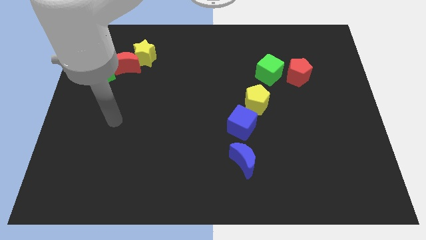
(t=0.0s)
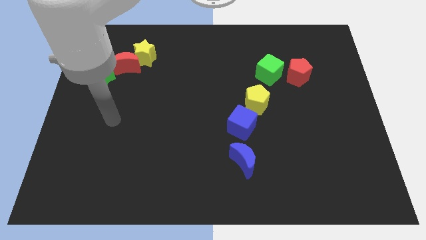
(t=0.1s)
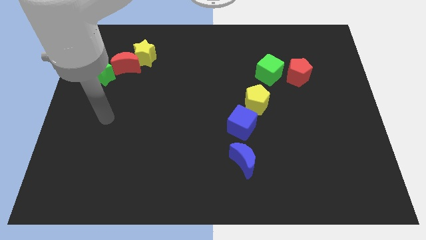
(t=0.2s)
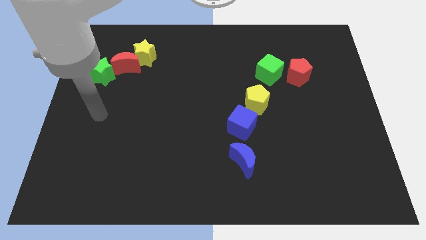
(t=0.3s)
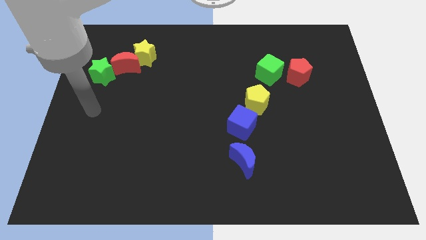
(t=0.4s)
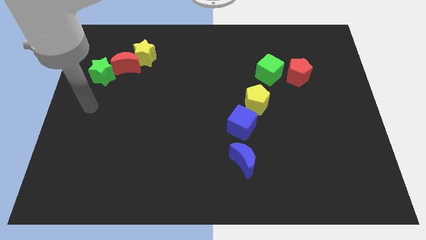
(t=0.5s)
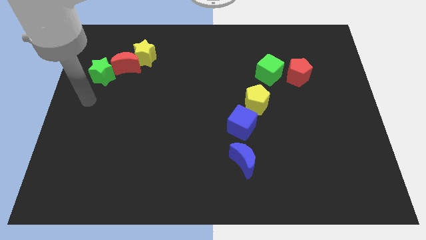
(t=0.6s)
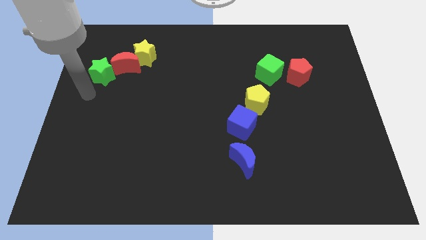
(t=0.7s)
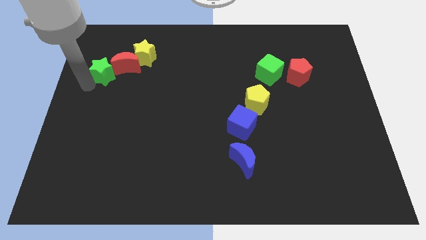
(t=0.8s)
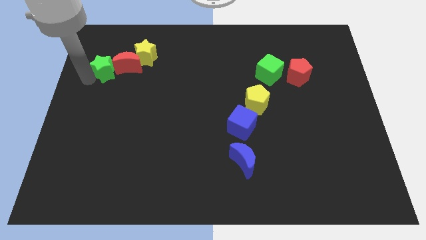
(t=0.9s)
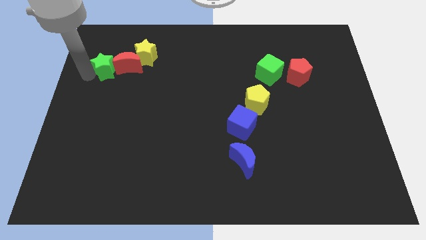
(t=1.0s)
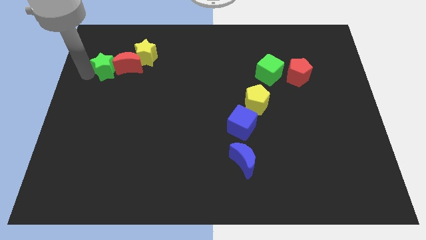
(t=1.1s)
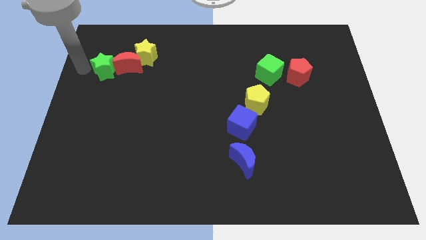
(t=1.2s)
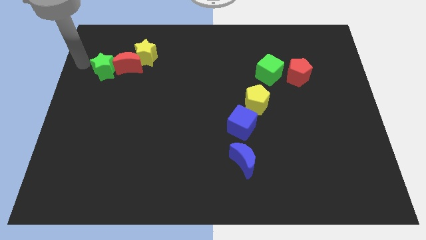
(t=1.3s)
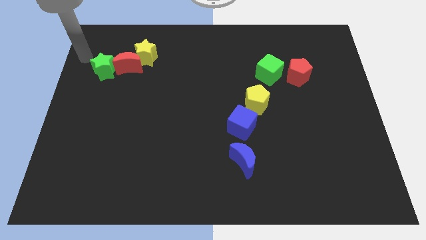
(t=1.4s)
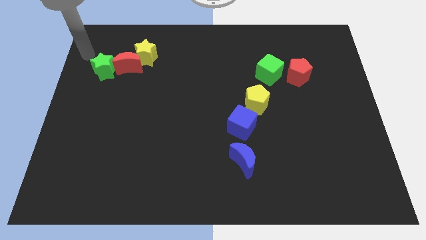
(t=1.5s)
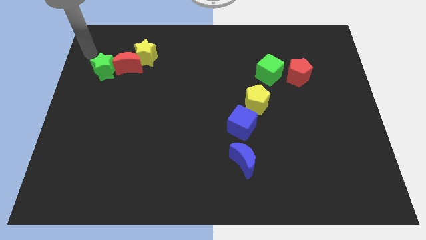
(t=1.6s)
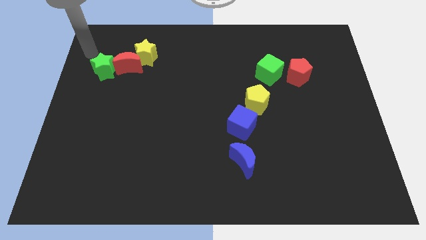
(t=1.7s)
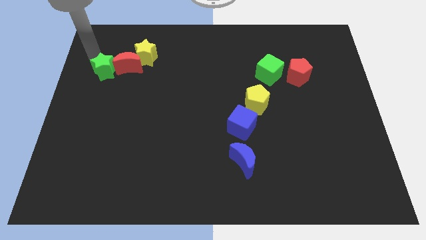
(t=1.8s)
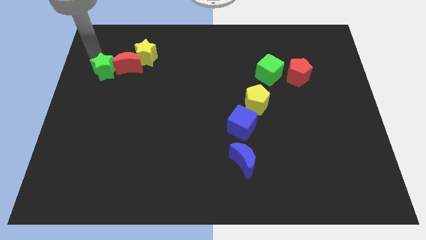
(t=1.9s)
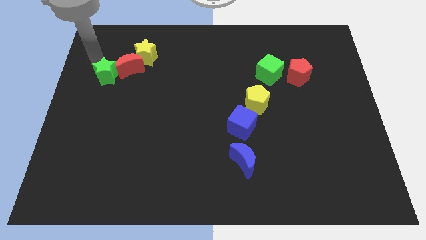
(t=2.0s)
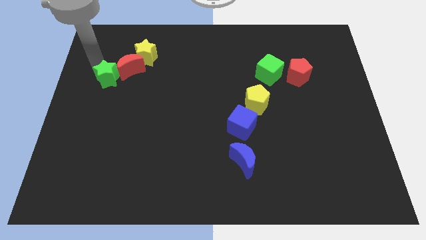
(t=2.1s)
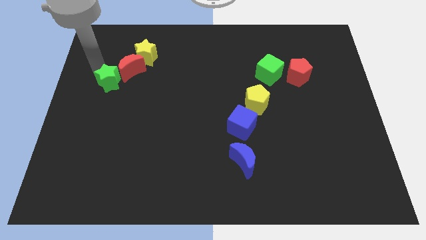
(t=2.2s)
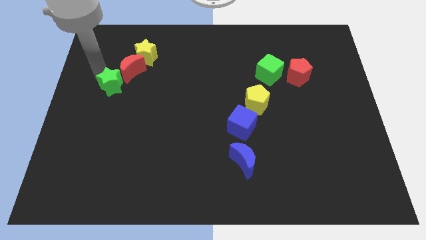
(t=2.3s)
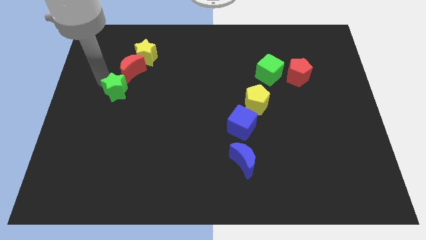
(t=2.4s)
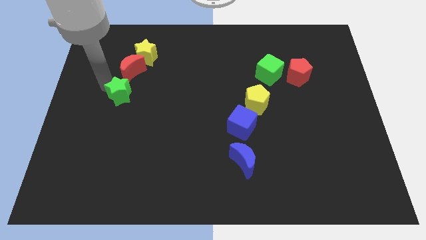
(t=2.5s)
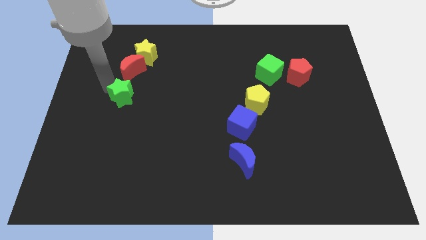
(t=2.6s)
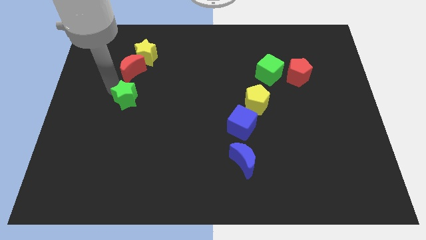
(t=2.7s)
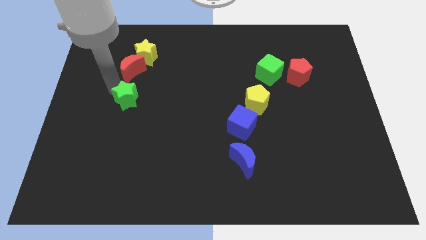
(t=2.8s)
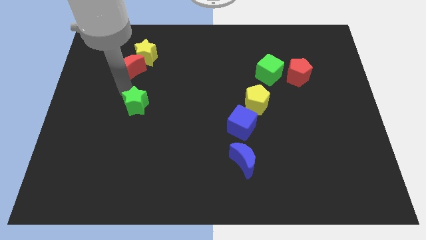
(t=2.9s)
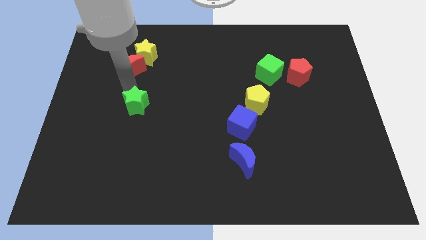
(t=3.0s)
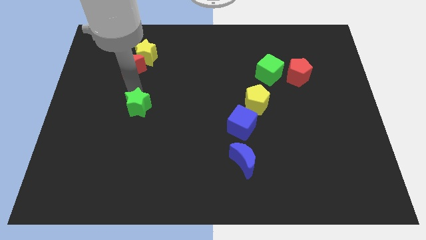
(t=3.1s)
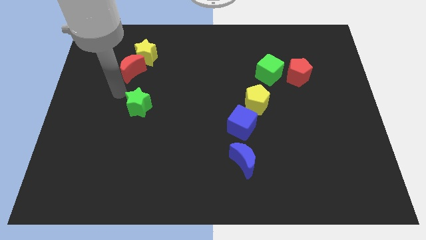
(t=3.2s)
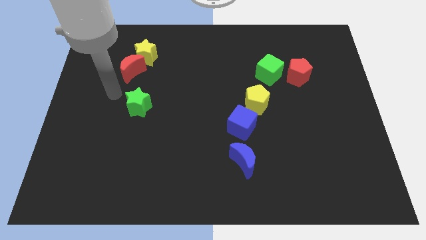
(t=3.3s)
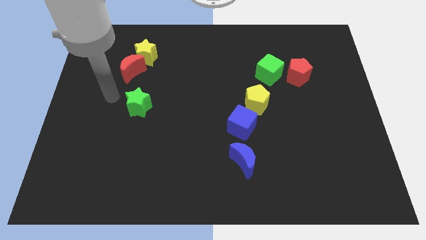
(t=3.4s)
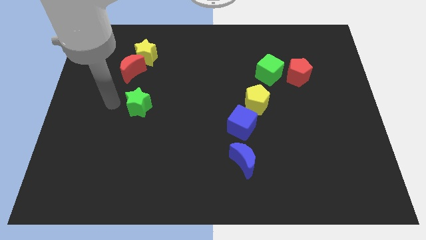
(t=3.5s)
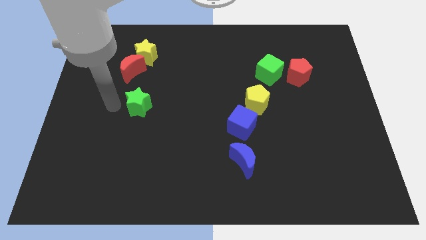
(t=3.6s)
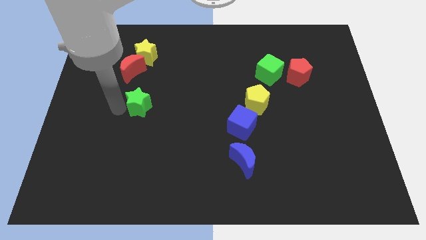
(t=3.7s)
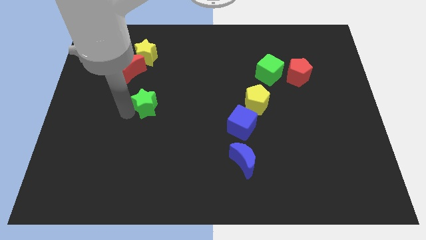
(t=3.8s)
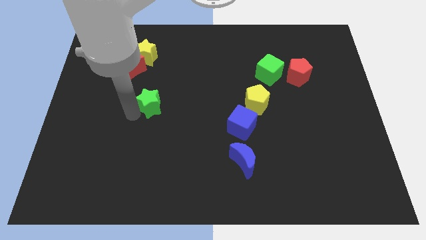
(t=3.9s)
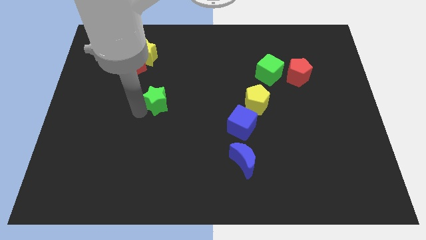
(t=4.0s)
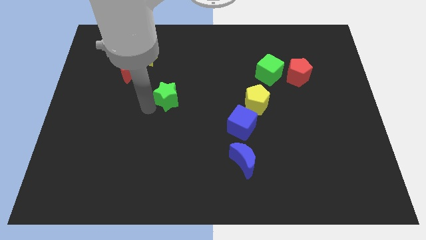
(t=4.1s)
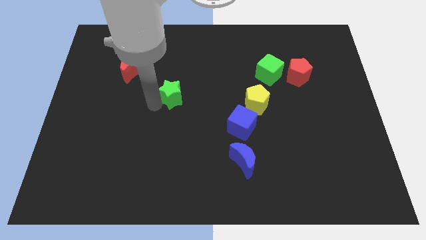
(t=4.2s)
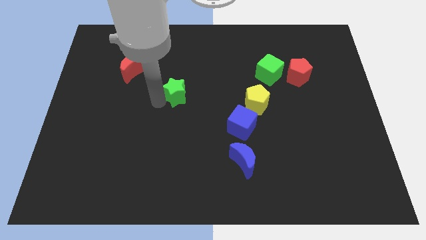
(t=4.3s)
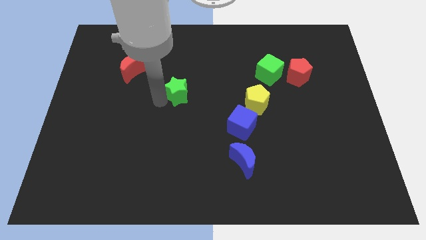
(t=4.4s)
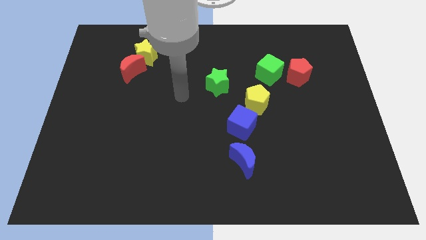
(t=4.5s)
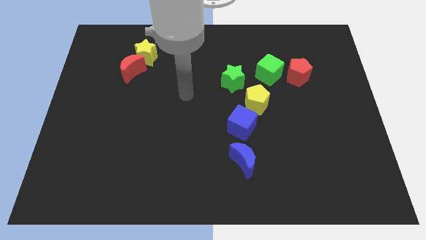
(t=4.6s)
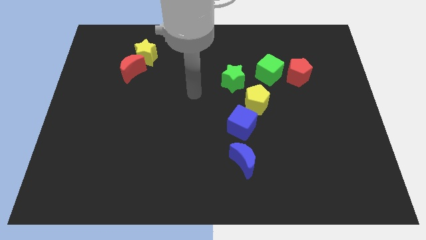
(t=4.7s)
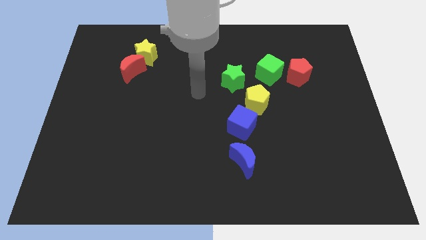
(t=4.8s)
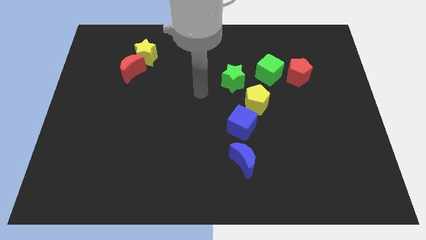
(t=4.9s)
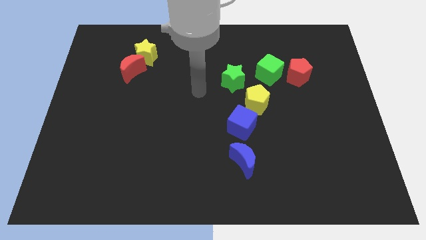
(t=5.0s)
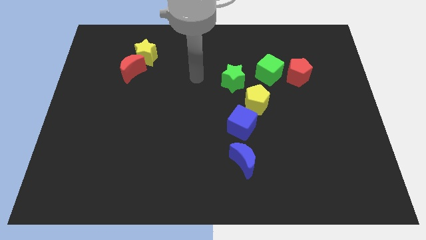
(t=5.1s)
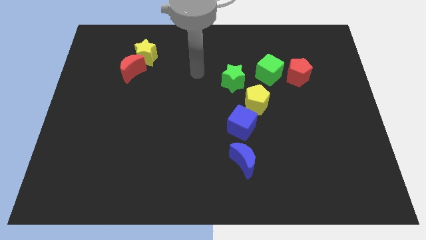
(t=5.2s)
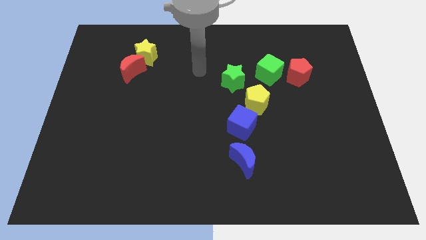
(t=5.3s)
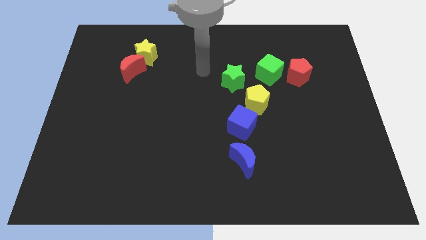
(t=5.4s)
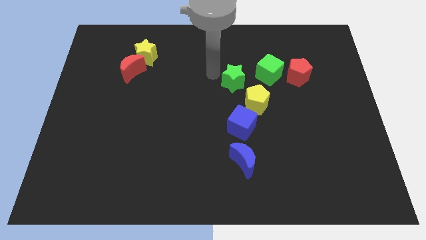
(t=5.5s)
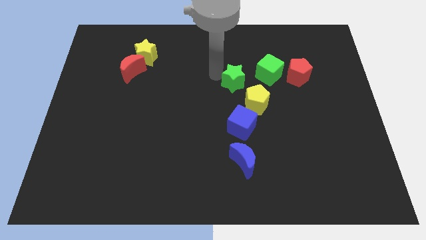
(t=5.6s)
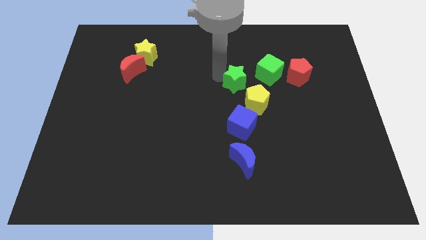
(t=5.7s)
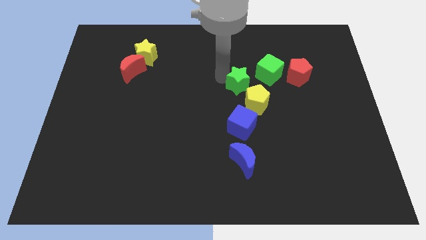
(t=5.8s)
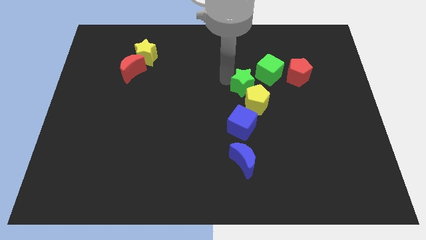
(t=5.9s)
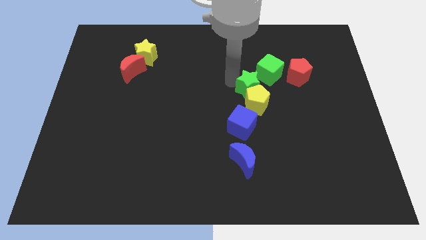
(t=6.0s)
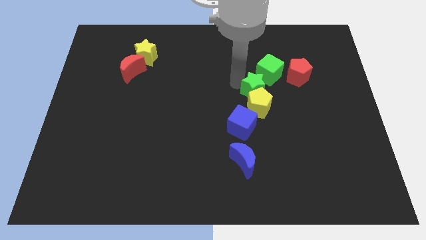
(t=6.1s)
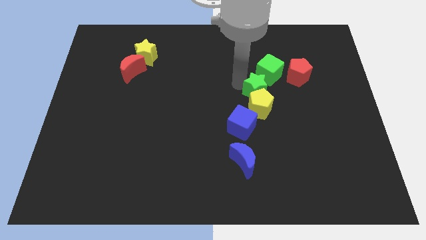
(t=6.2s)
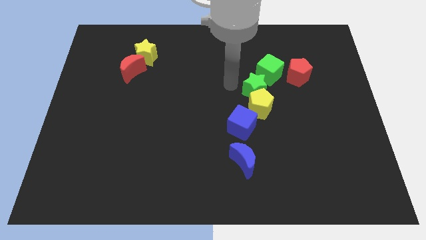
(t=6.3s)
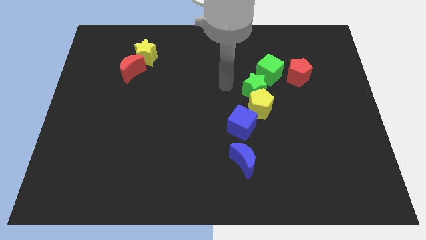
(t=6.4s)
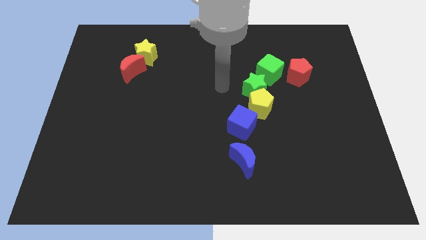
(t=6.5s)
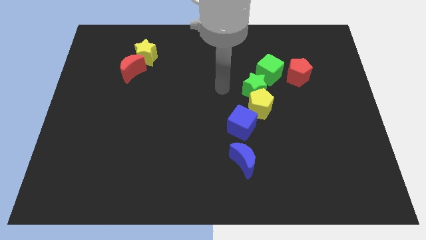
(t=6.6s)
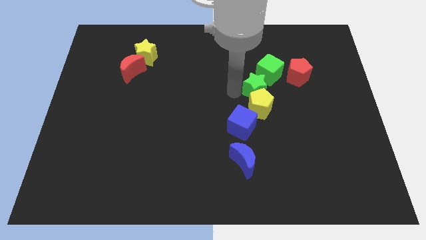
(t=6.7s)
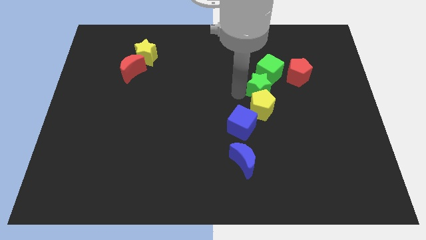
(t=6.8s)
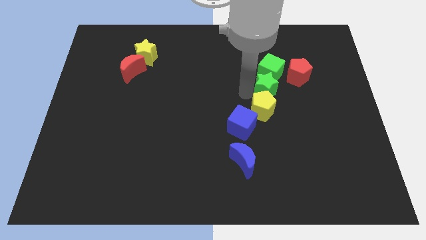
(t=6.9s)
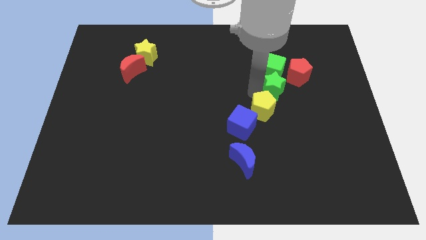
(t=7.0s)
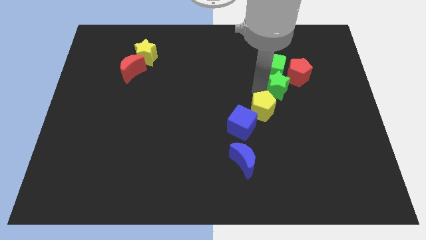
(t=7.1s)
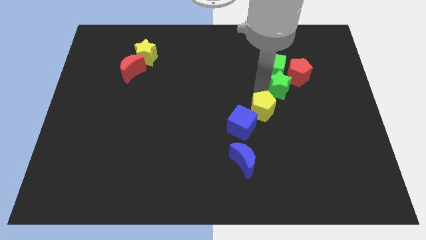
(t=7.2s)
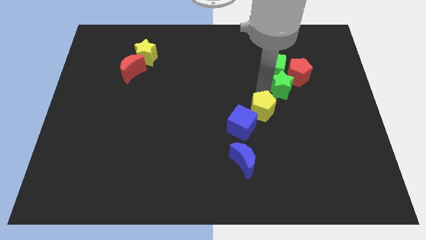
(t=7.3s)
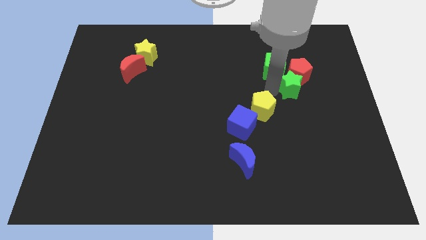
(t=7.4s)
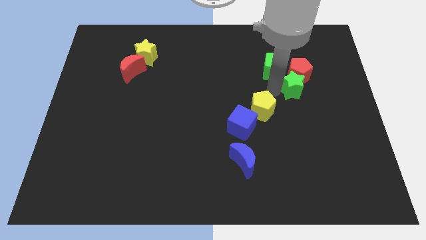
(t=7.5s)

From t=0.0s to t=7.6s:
put the green star next to the red pentagon

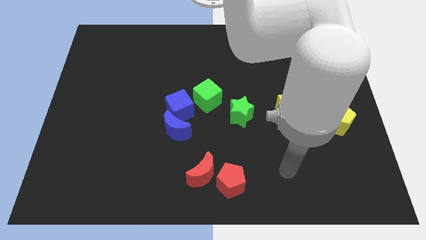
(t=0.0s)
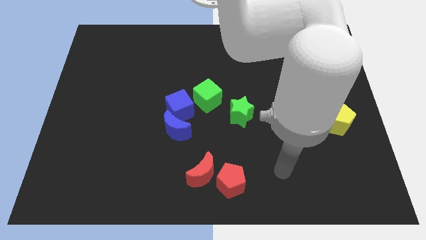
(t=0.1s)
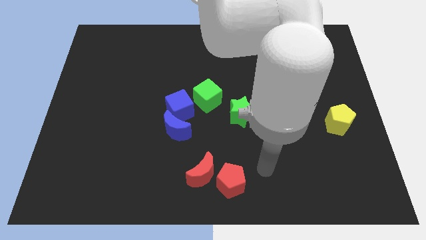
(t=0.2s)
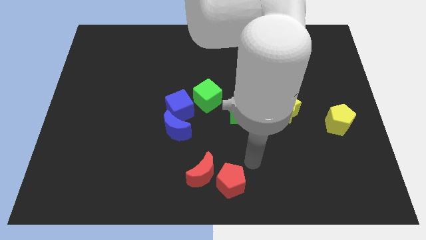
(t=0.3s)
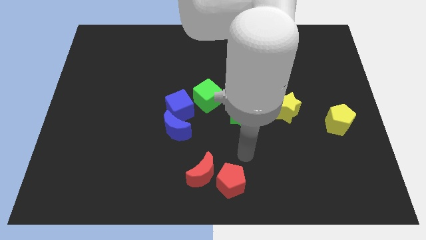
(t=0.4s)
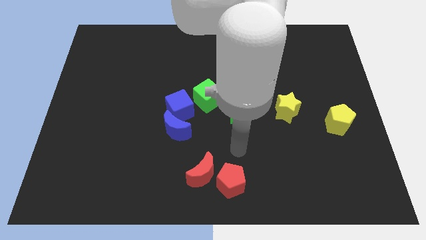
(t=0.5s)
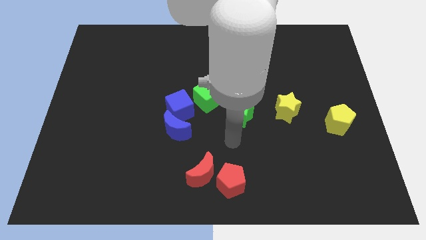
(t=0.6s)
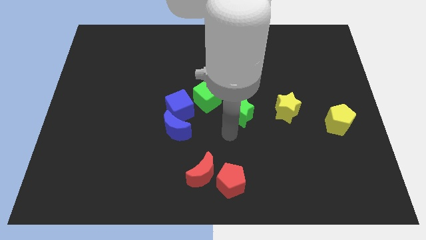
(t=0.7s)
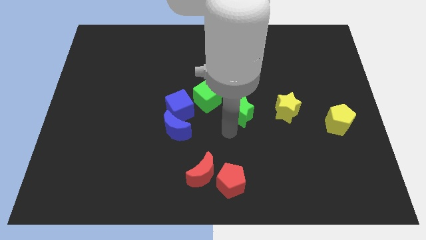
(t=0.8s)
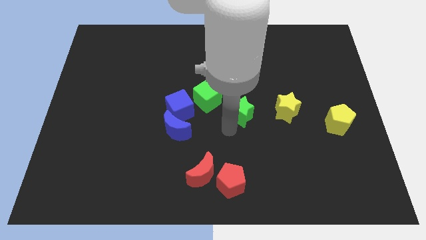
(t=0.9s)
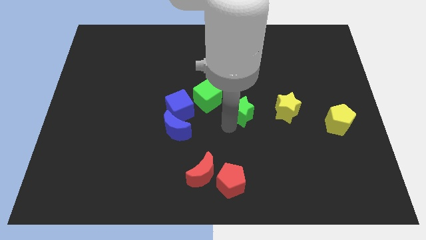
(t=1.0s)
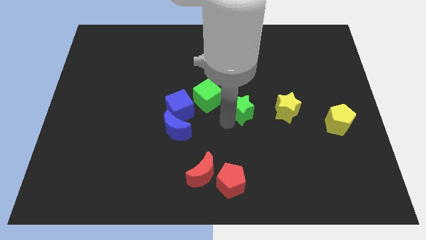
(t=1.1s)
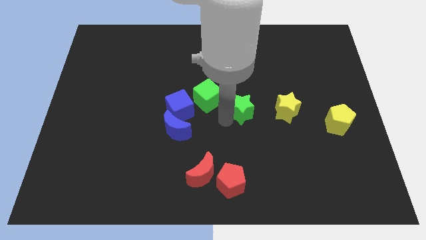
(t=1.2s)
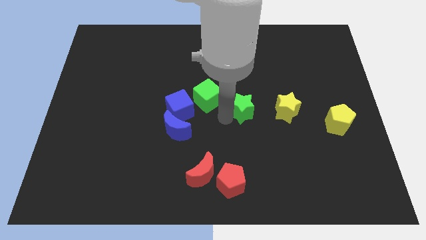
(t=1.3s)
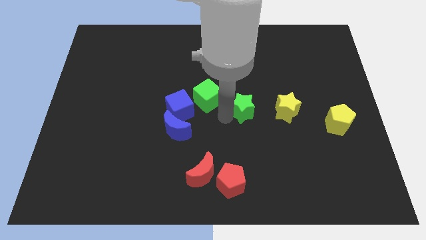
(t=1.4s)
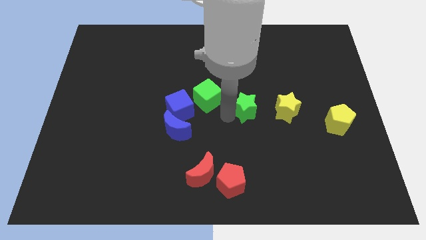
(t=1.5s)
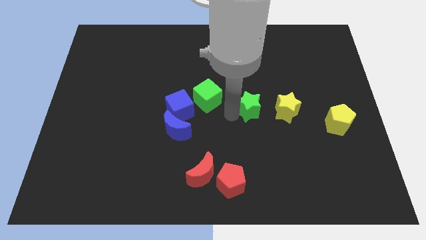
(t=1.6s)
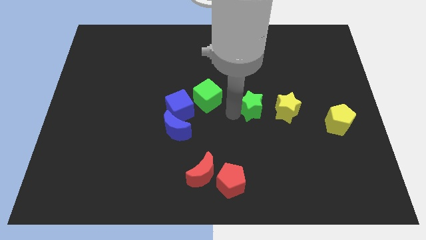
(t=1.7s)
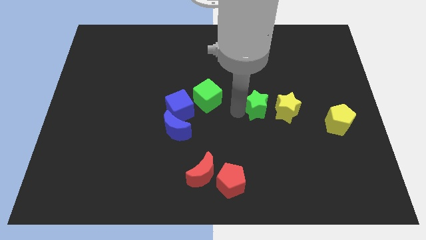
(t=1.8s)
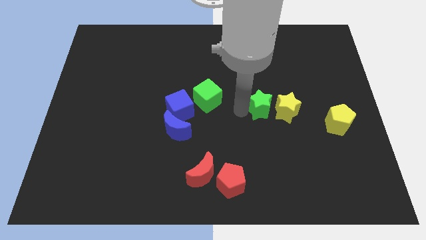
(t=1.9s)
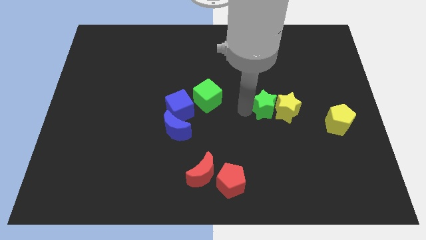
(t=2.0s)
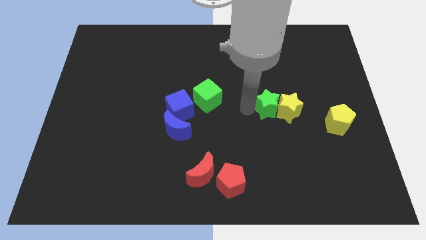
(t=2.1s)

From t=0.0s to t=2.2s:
slide the green star to the yellow star
